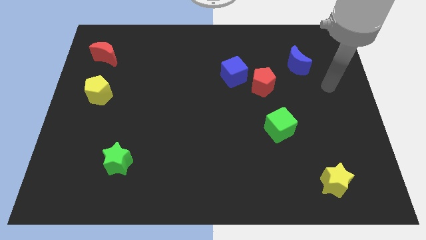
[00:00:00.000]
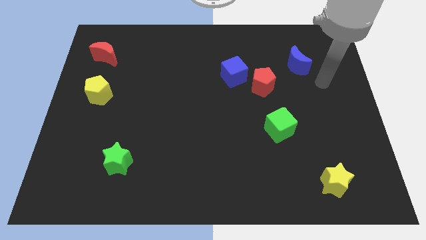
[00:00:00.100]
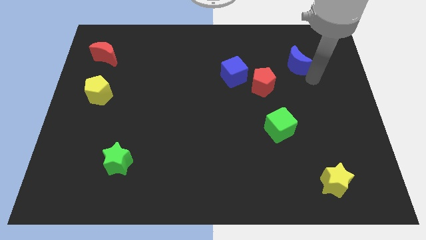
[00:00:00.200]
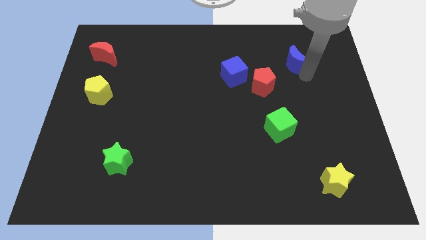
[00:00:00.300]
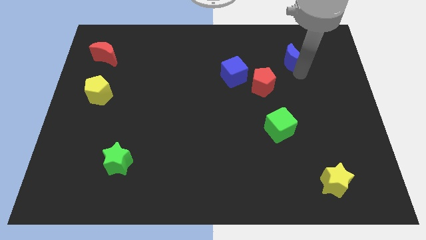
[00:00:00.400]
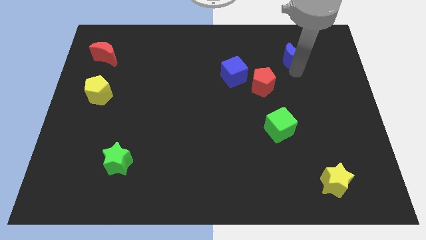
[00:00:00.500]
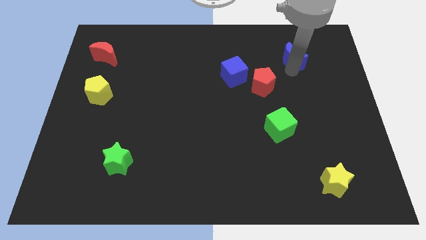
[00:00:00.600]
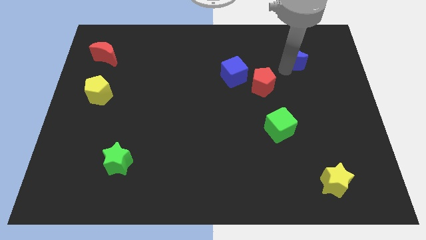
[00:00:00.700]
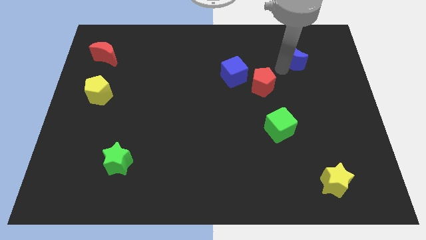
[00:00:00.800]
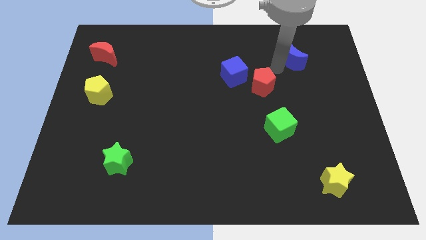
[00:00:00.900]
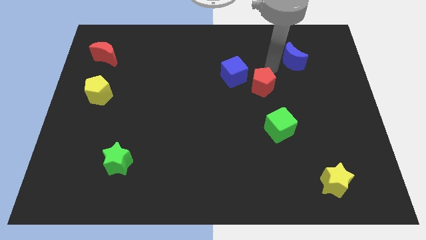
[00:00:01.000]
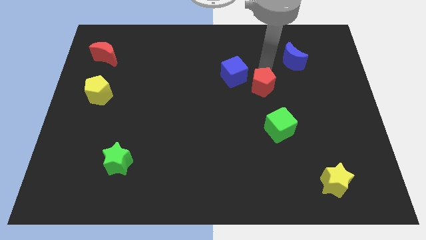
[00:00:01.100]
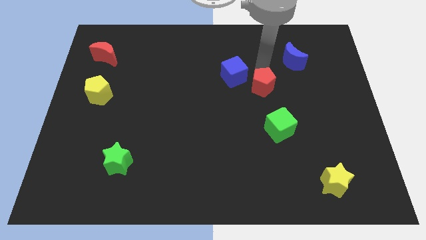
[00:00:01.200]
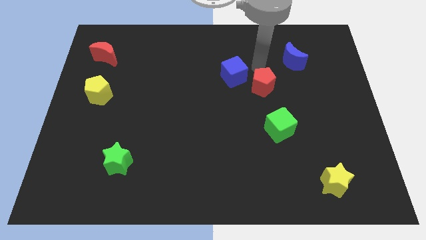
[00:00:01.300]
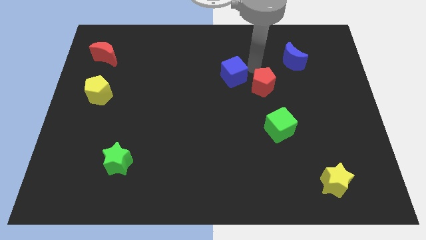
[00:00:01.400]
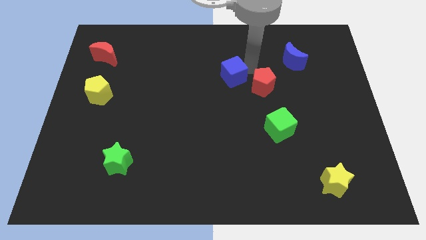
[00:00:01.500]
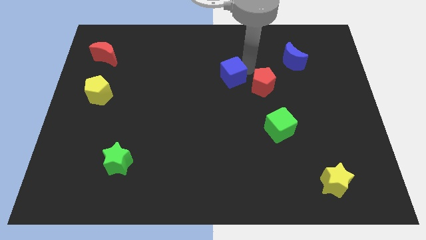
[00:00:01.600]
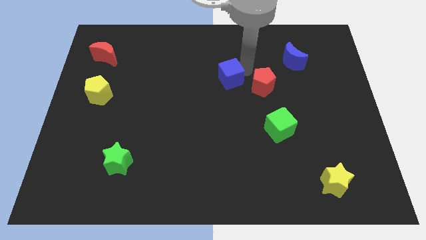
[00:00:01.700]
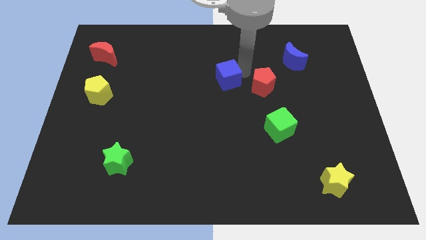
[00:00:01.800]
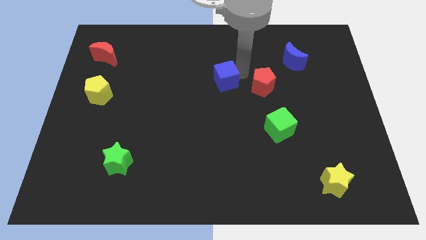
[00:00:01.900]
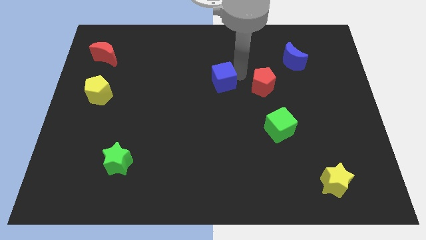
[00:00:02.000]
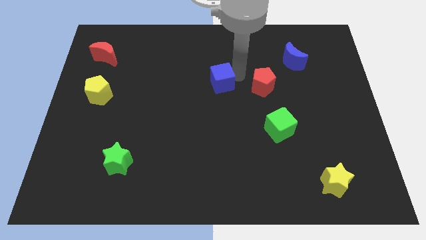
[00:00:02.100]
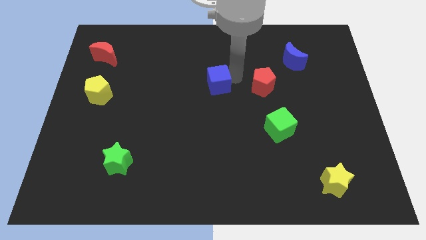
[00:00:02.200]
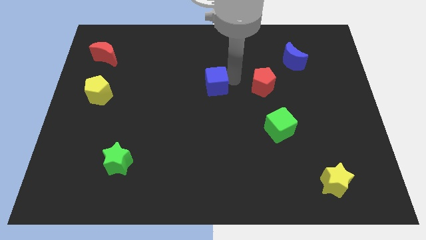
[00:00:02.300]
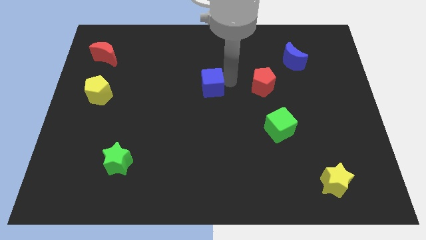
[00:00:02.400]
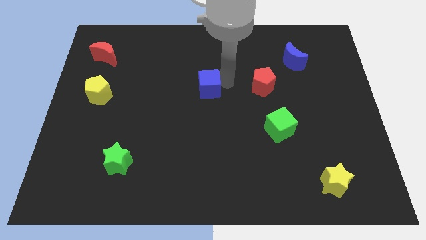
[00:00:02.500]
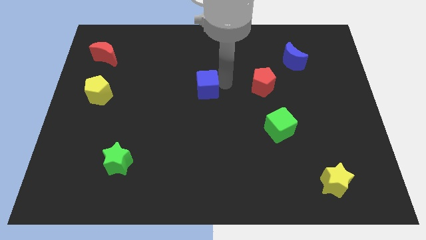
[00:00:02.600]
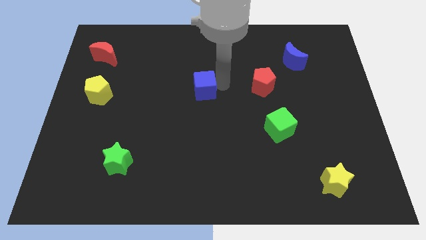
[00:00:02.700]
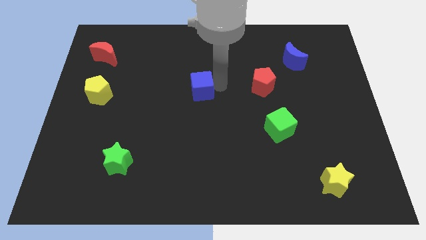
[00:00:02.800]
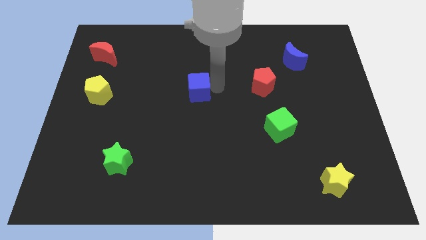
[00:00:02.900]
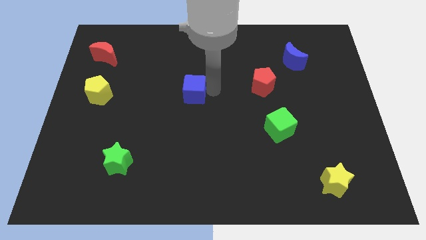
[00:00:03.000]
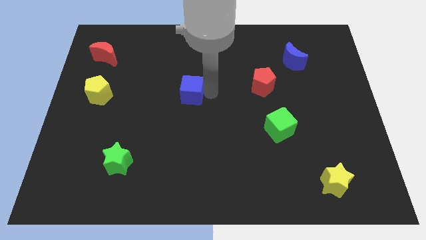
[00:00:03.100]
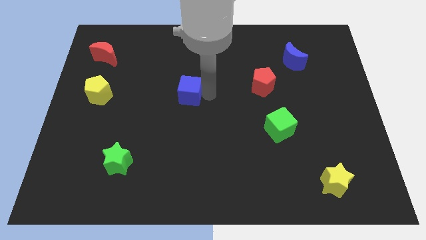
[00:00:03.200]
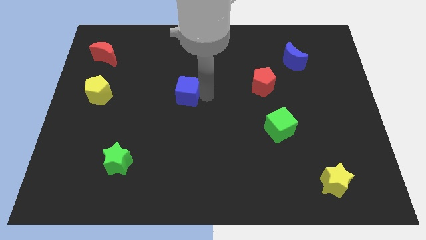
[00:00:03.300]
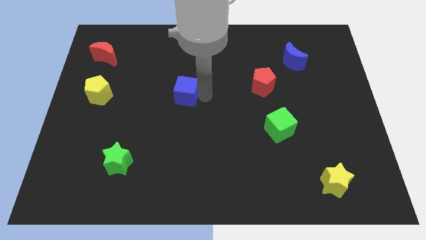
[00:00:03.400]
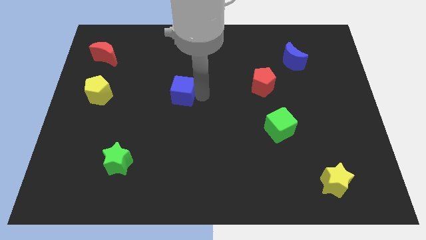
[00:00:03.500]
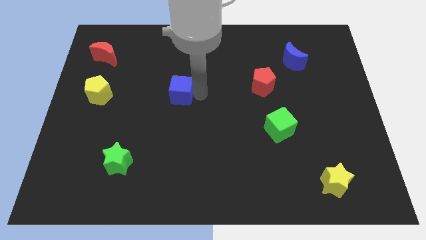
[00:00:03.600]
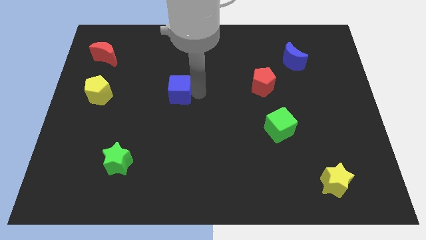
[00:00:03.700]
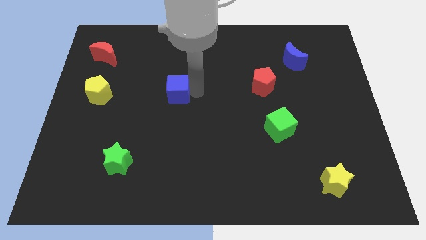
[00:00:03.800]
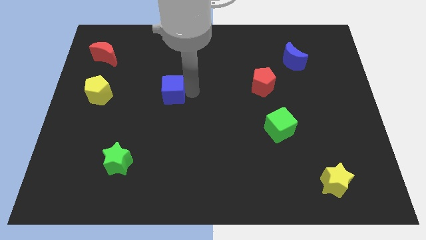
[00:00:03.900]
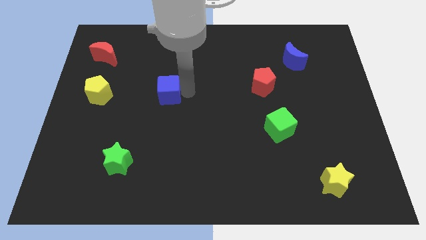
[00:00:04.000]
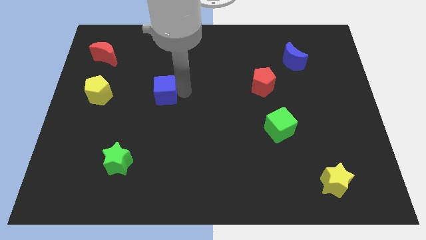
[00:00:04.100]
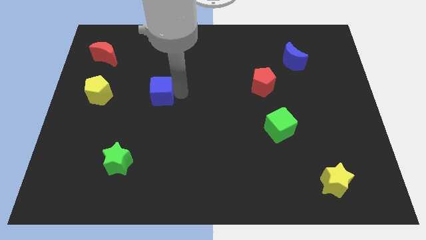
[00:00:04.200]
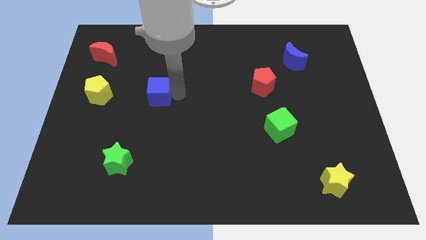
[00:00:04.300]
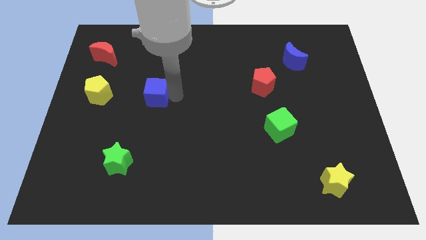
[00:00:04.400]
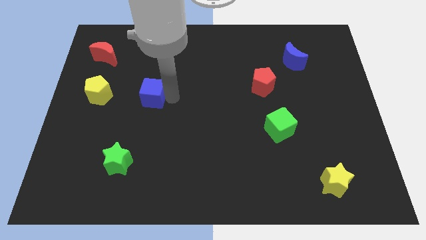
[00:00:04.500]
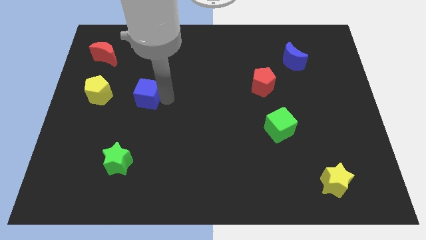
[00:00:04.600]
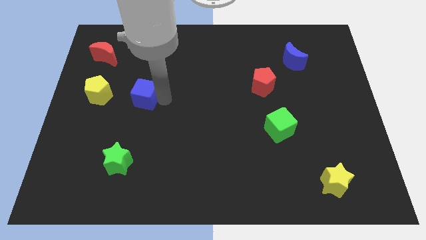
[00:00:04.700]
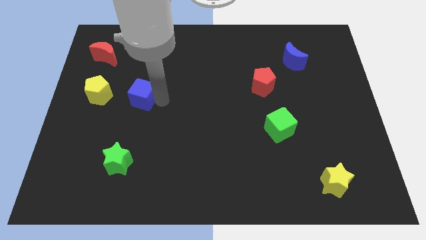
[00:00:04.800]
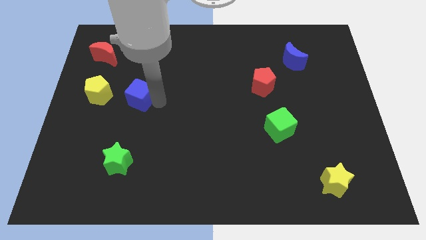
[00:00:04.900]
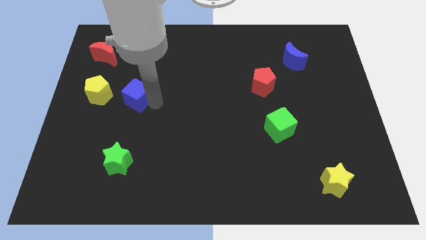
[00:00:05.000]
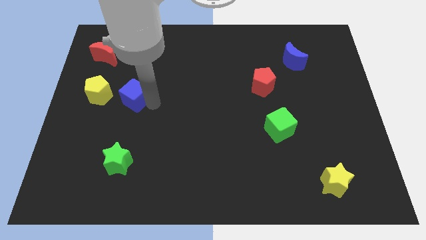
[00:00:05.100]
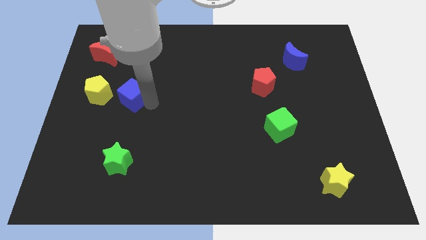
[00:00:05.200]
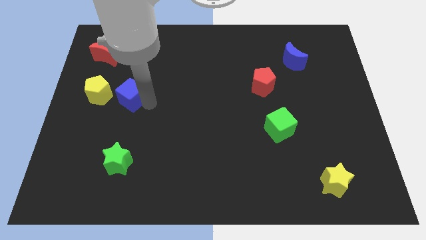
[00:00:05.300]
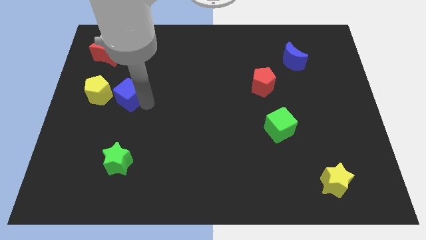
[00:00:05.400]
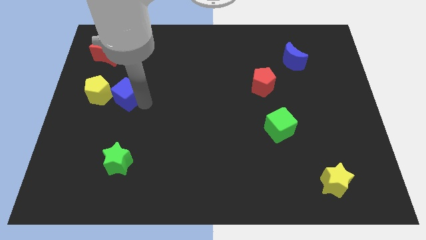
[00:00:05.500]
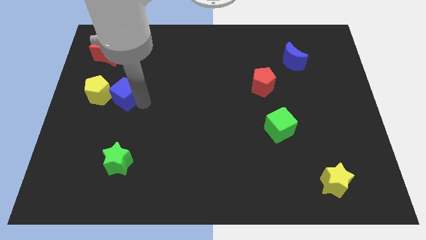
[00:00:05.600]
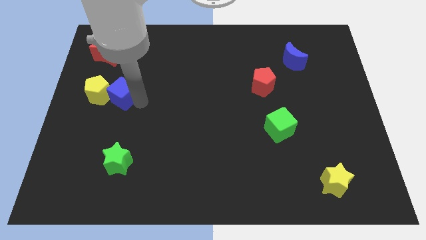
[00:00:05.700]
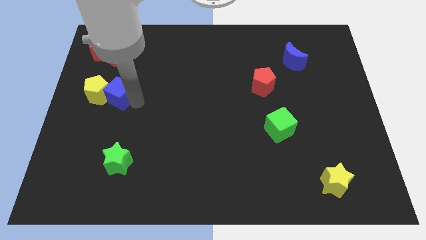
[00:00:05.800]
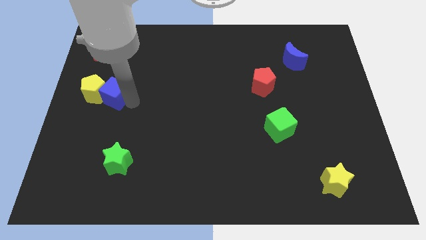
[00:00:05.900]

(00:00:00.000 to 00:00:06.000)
move the blue cube close to the yellow pentagon

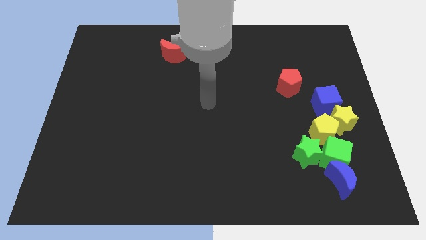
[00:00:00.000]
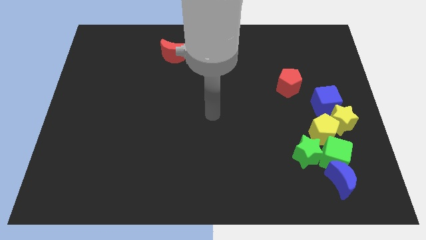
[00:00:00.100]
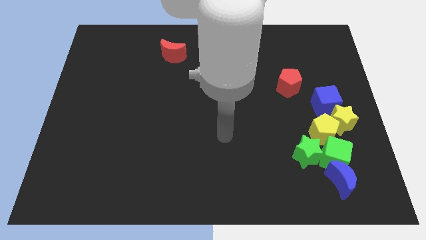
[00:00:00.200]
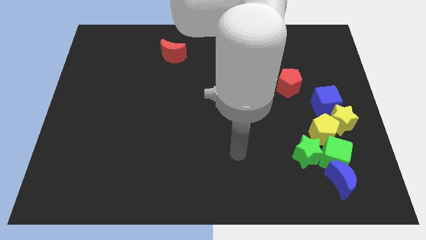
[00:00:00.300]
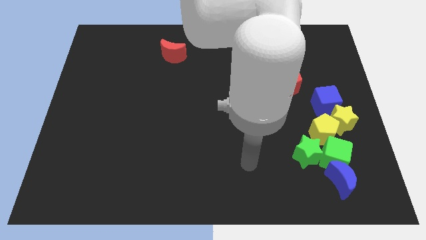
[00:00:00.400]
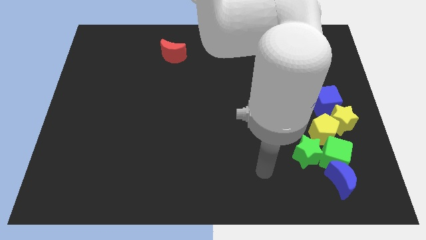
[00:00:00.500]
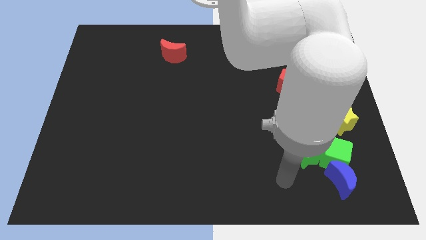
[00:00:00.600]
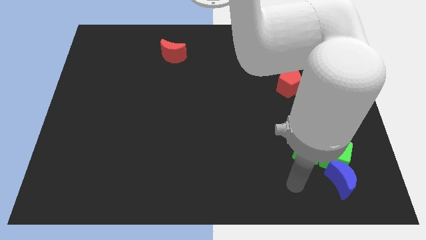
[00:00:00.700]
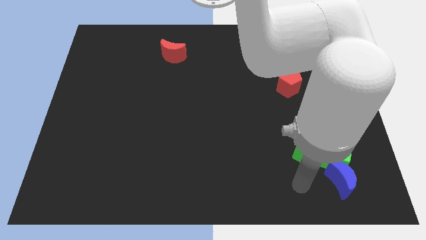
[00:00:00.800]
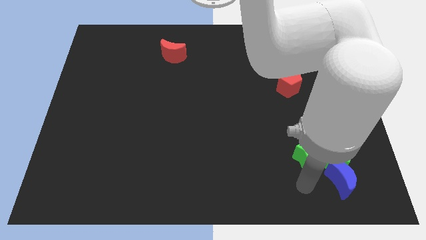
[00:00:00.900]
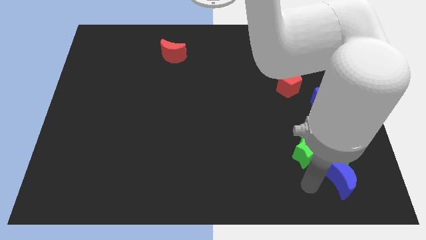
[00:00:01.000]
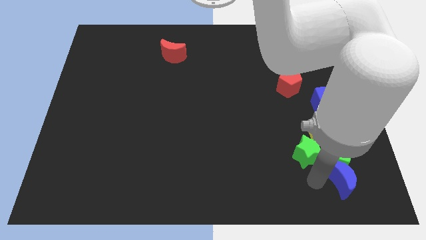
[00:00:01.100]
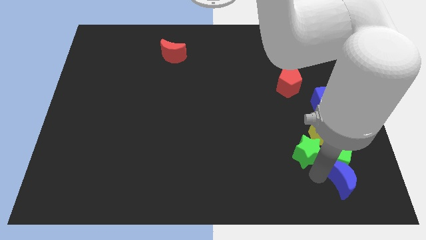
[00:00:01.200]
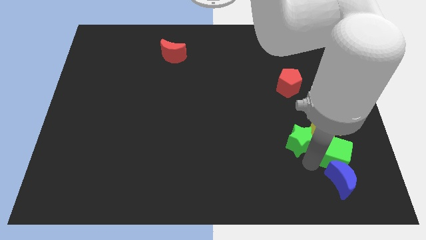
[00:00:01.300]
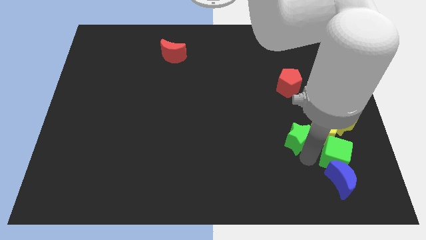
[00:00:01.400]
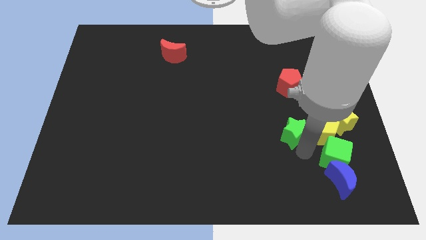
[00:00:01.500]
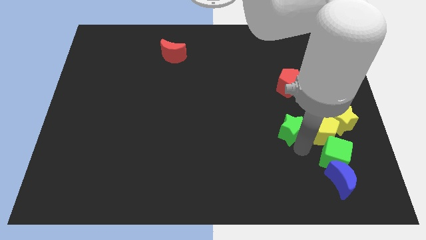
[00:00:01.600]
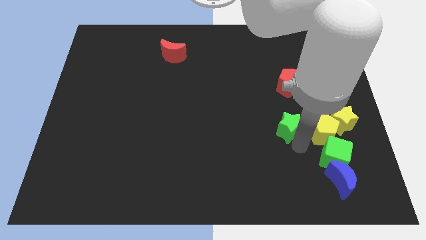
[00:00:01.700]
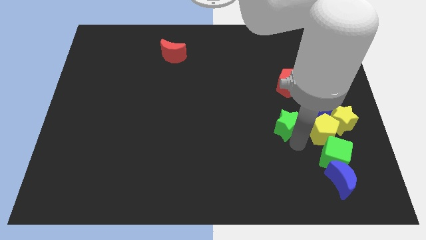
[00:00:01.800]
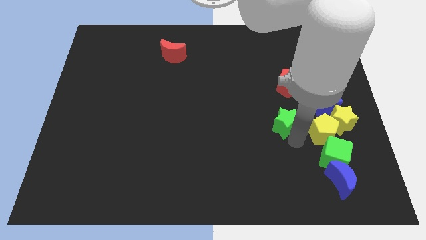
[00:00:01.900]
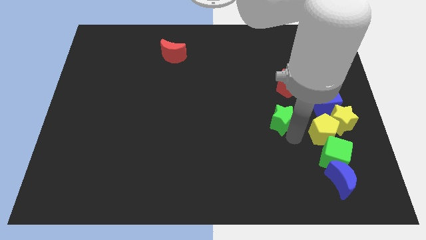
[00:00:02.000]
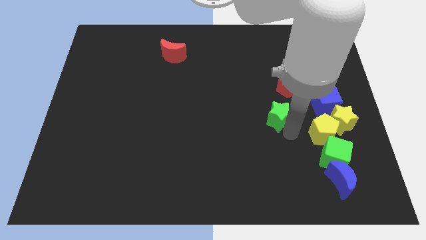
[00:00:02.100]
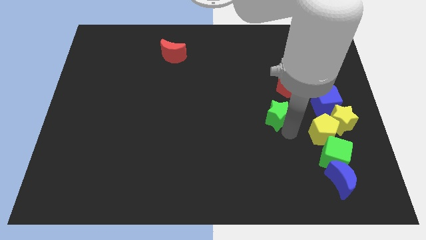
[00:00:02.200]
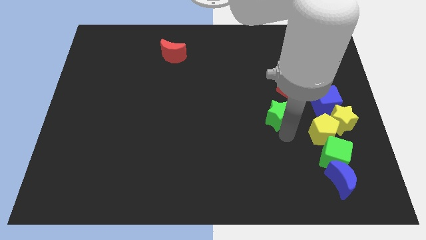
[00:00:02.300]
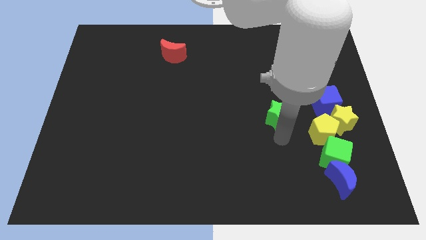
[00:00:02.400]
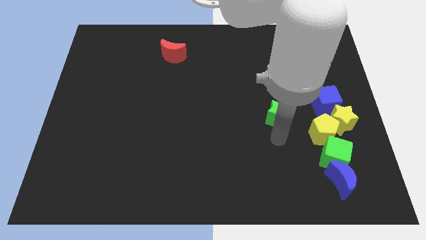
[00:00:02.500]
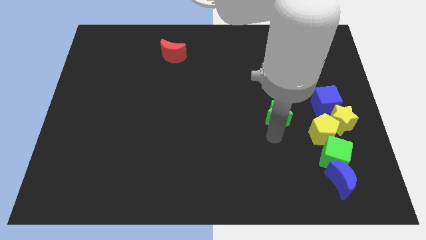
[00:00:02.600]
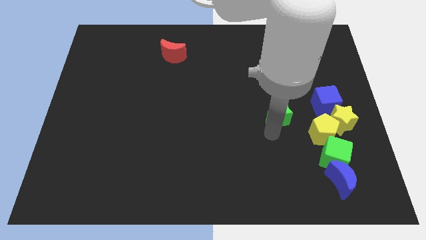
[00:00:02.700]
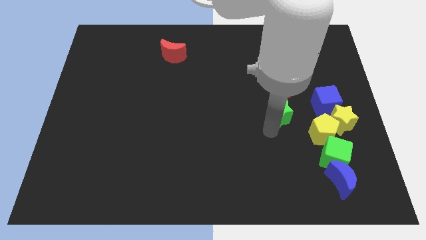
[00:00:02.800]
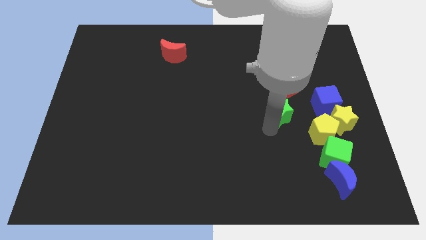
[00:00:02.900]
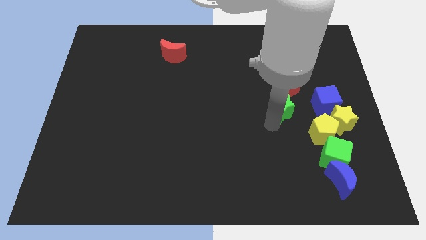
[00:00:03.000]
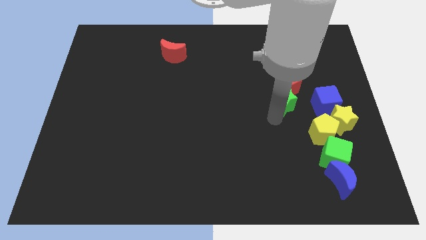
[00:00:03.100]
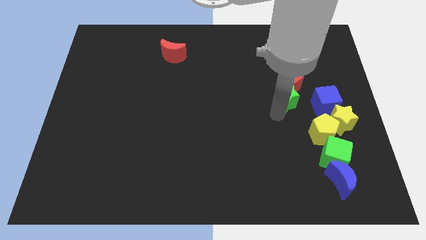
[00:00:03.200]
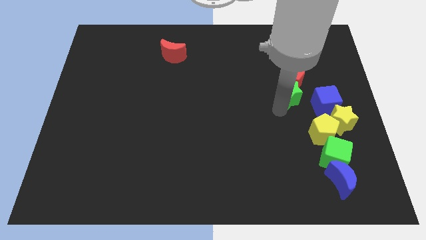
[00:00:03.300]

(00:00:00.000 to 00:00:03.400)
push the green star towards the red pentagon
